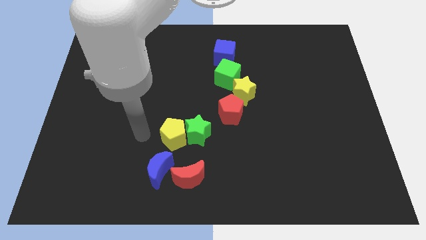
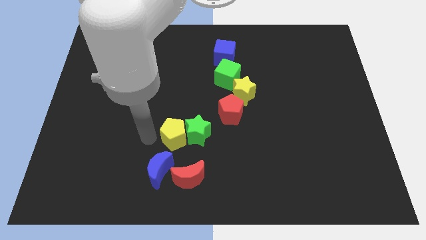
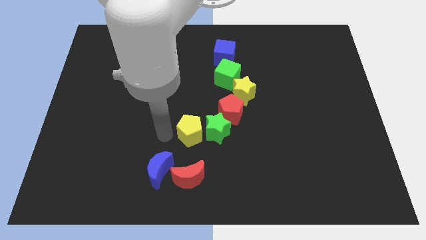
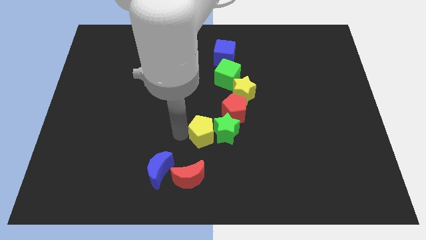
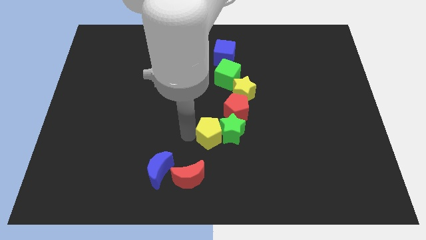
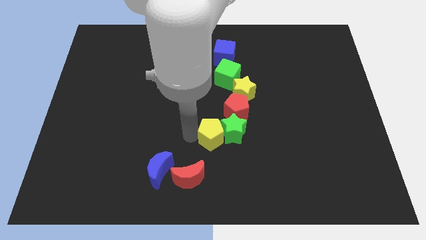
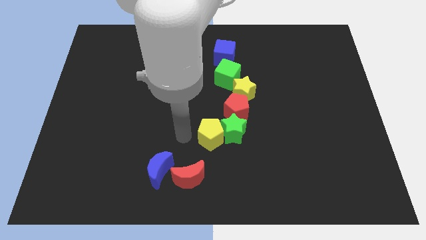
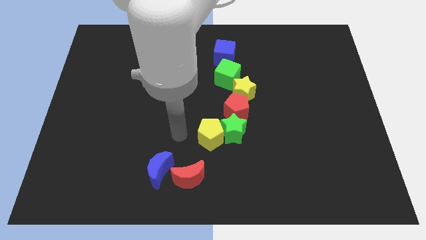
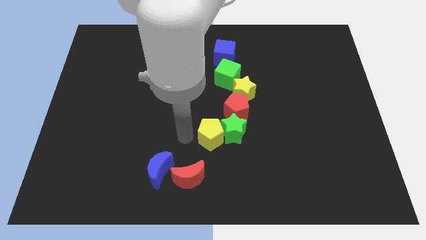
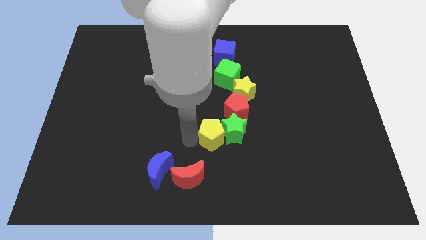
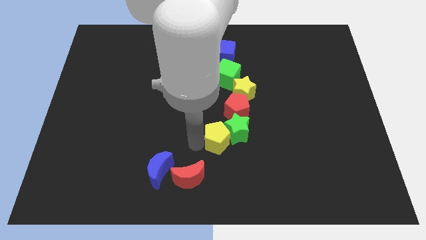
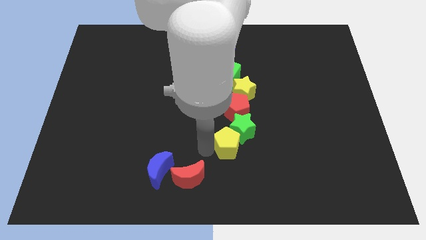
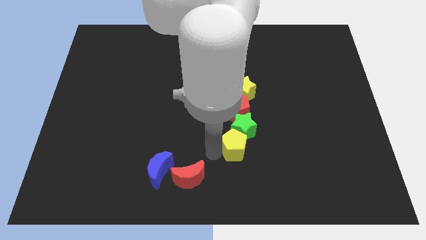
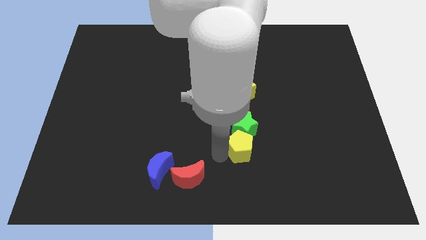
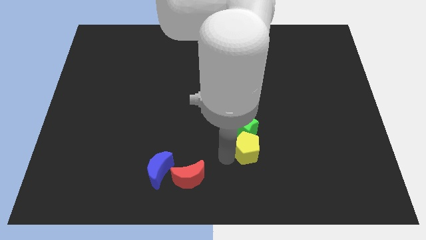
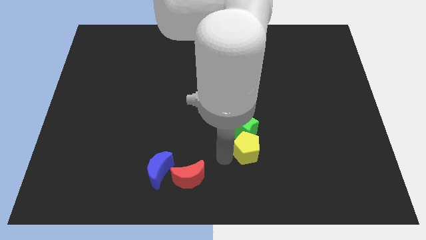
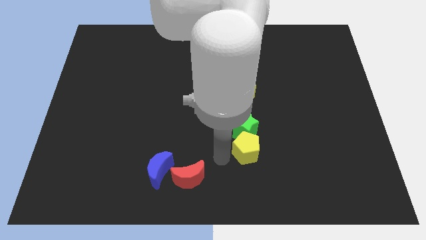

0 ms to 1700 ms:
move the green star and yellow pentagon to the bottom side of the red pentagon

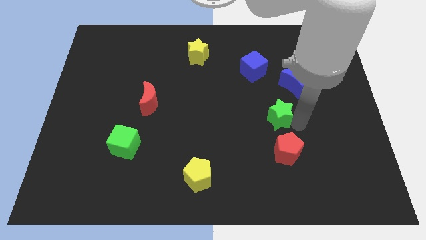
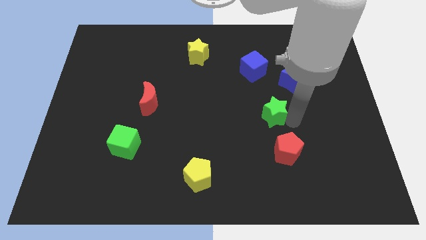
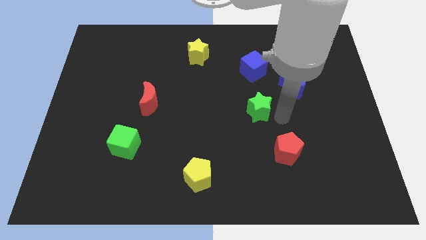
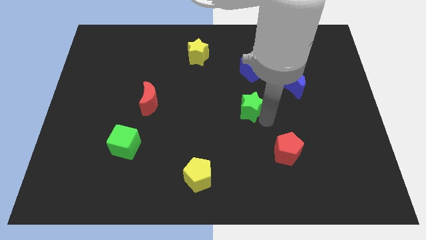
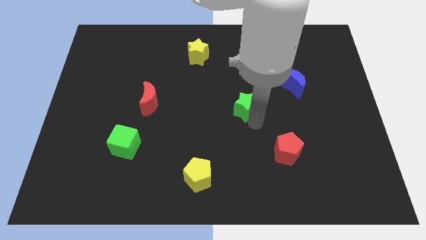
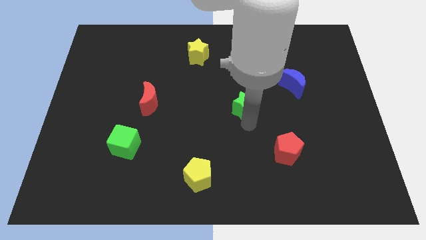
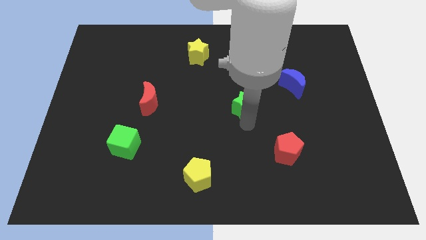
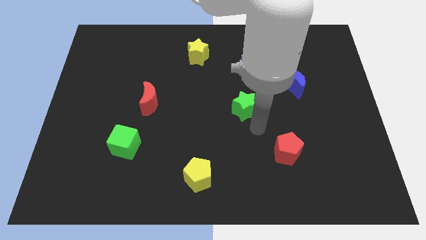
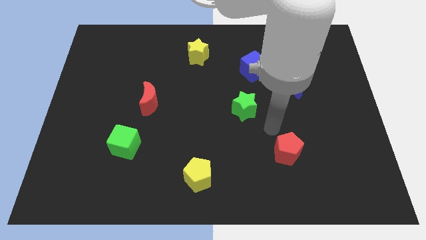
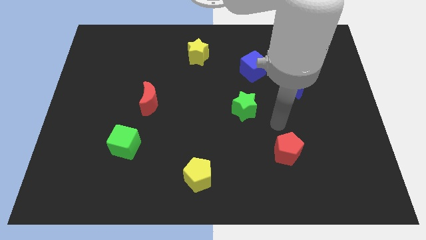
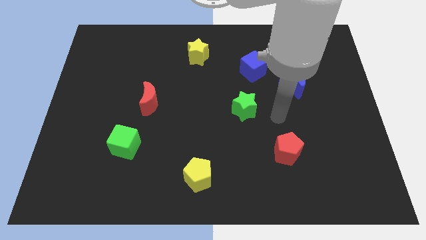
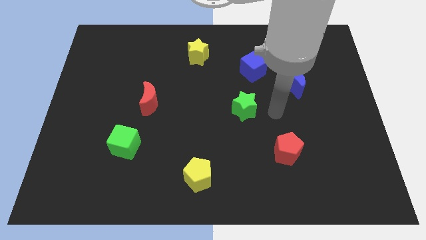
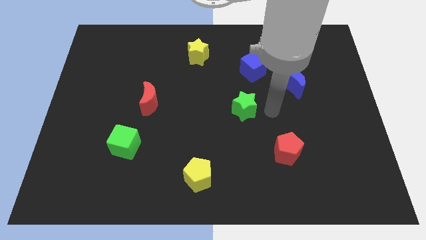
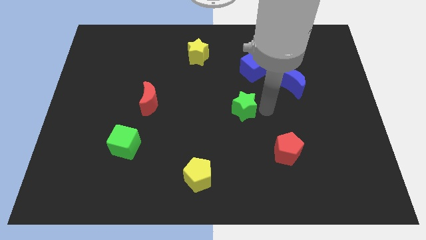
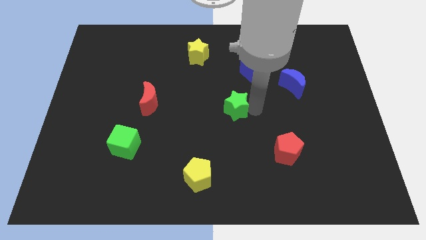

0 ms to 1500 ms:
place the green star in between the blue cube and yellow pentagon

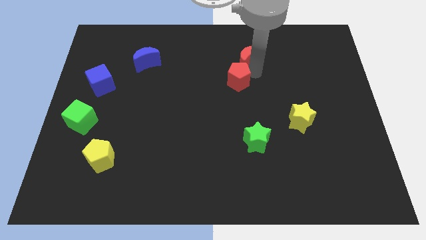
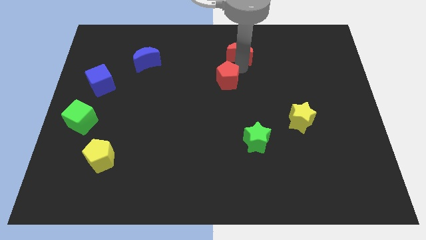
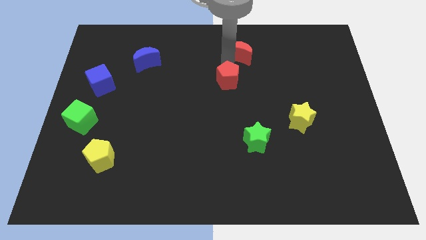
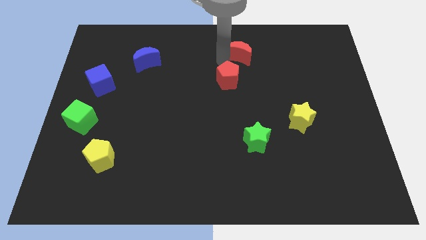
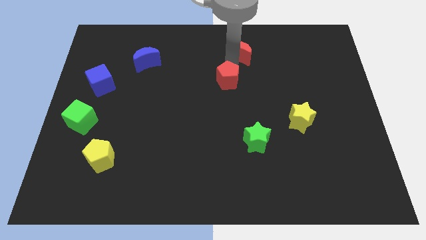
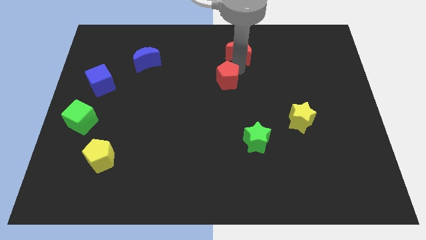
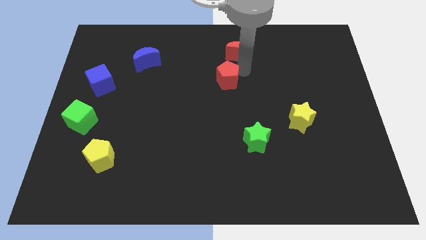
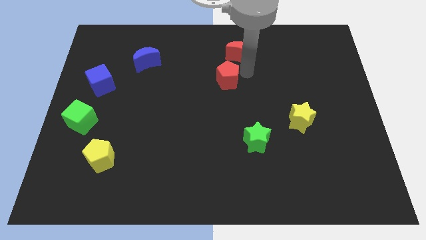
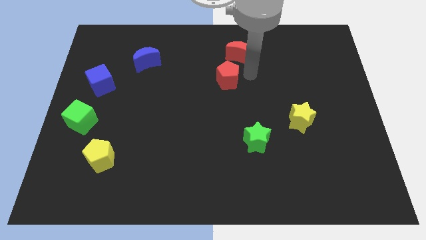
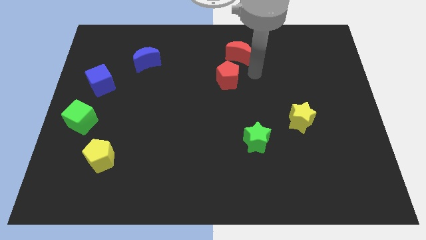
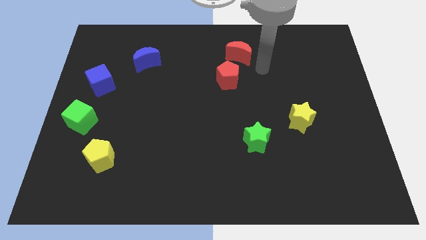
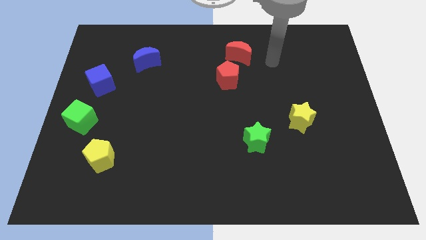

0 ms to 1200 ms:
separate the red pentagon from the red crescent

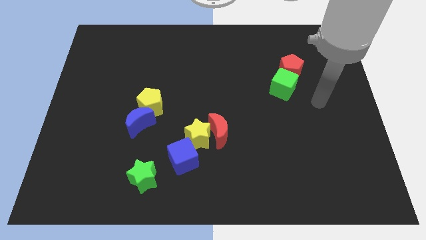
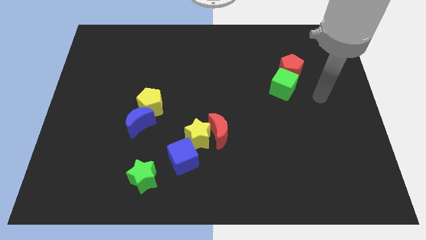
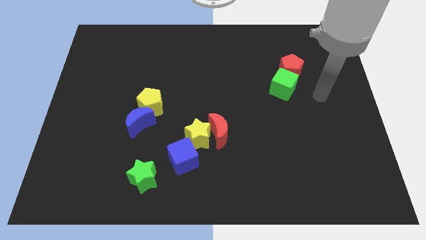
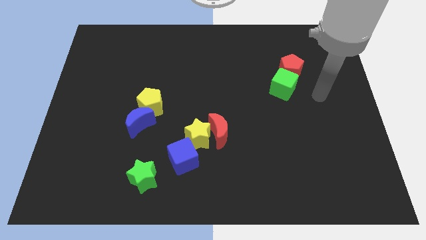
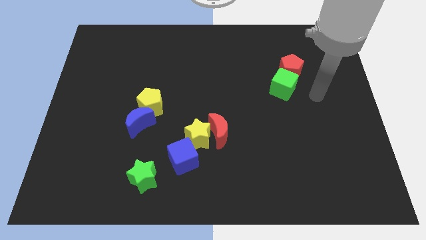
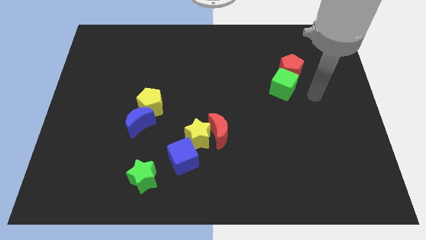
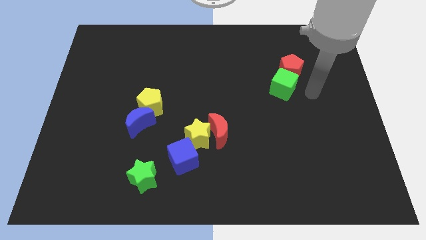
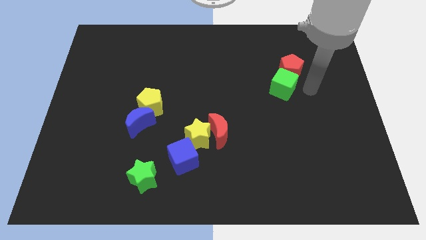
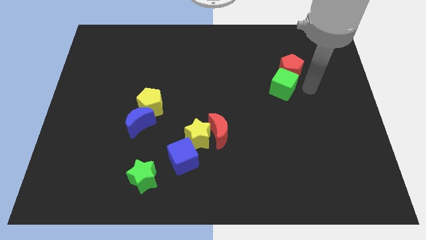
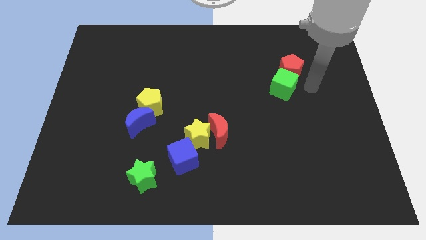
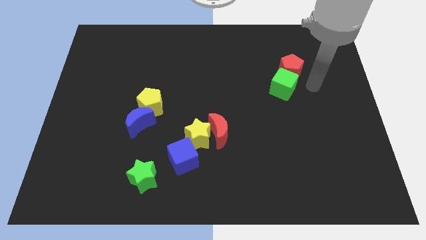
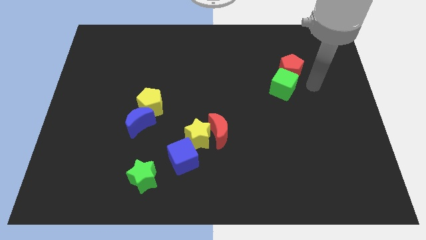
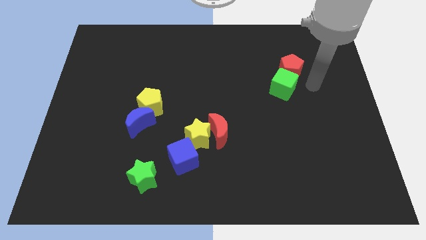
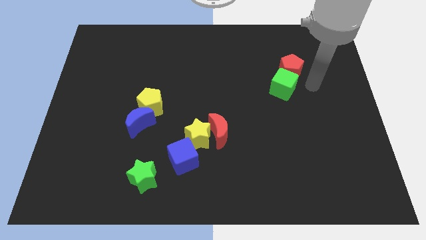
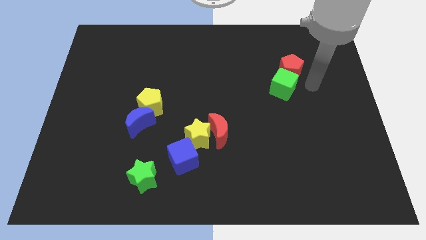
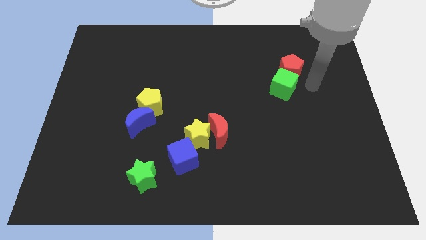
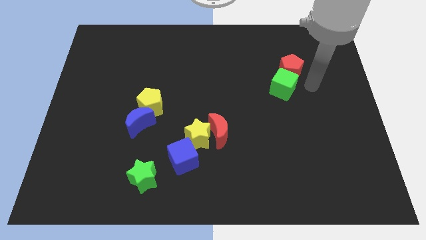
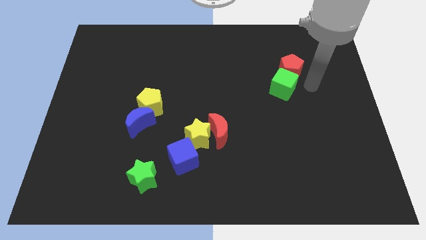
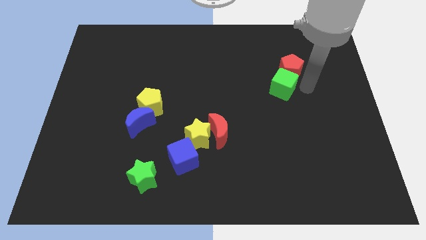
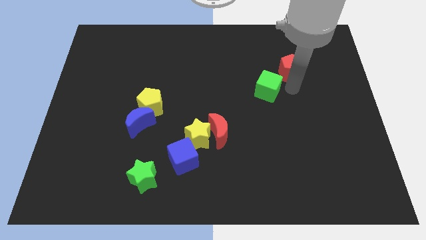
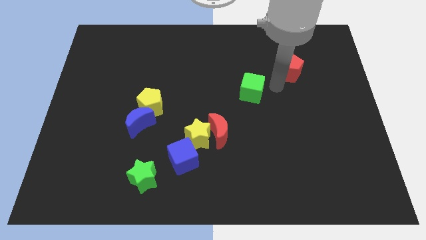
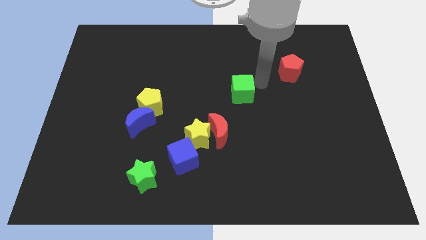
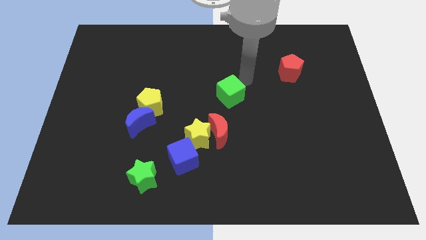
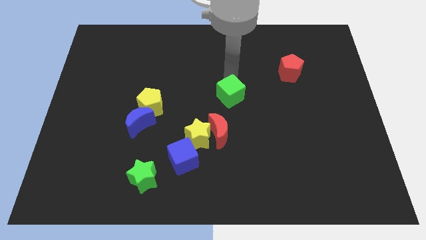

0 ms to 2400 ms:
separate the green cube from red pentagon

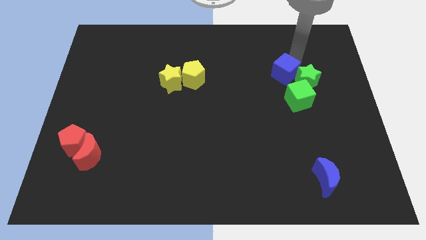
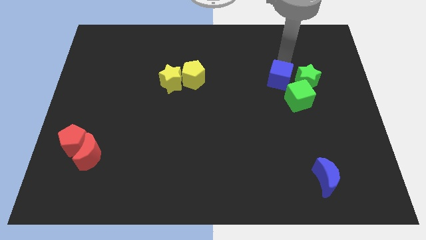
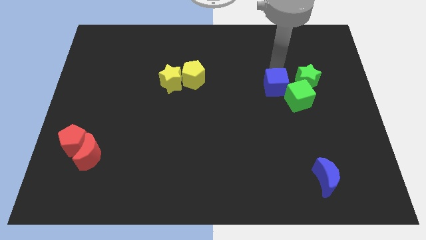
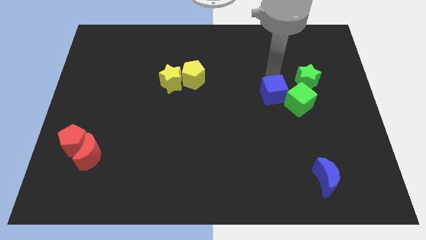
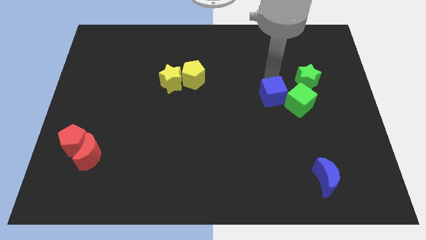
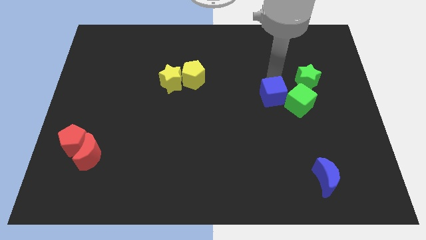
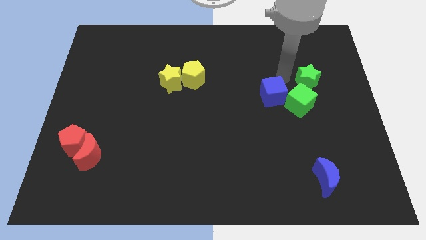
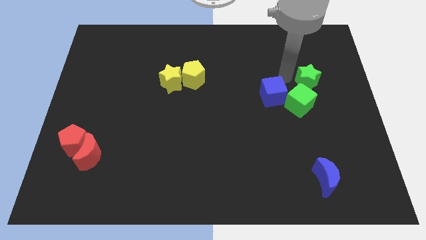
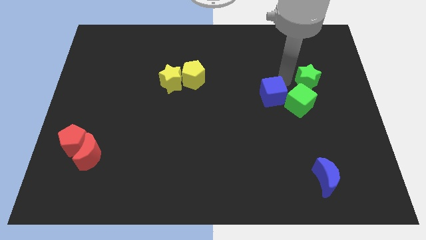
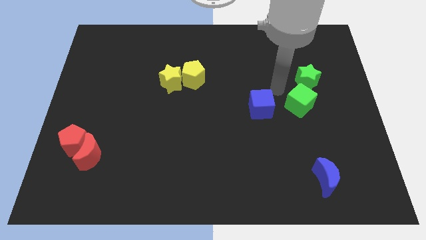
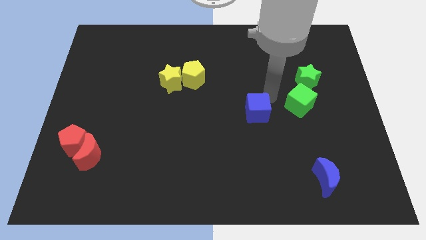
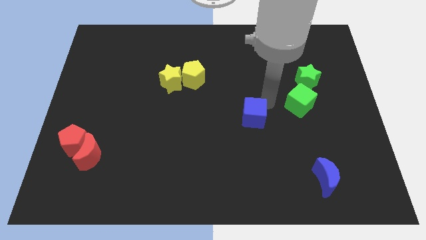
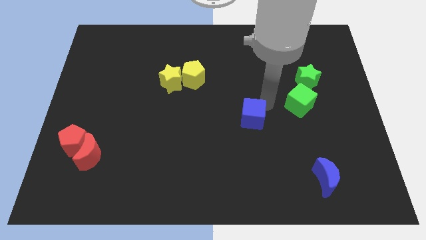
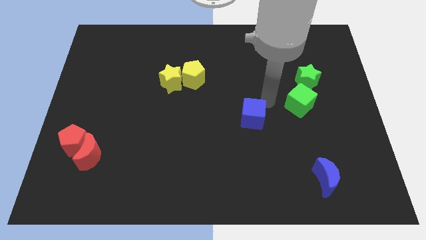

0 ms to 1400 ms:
slide the blue cube diagonally bottom right to the yellows blocks

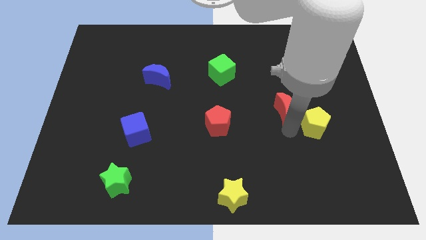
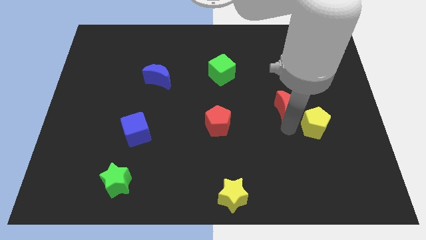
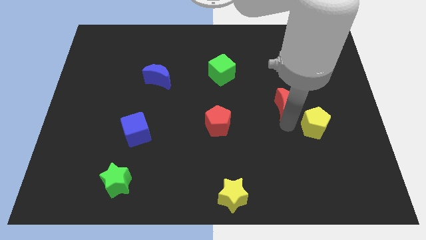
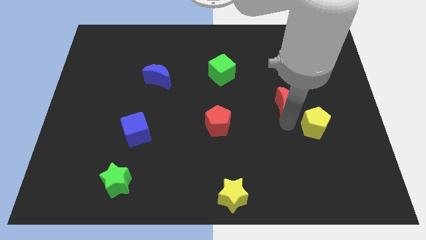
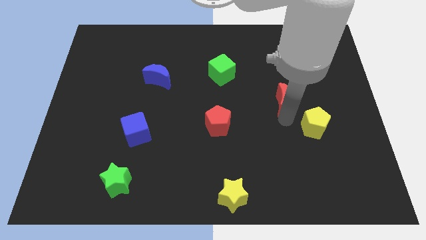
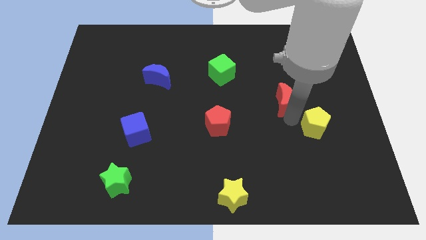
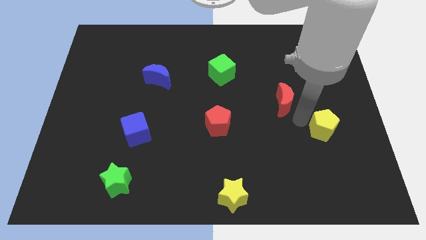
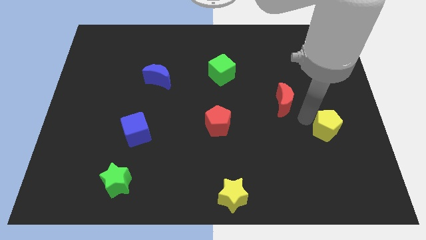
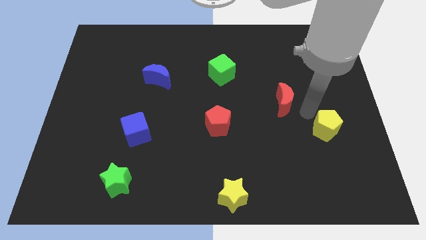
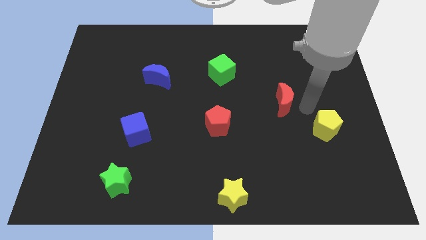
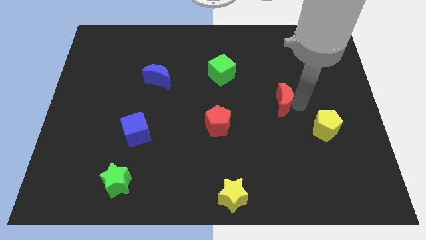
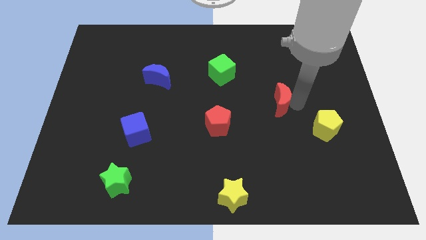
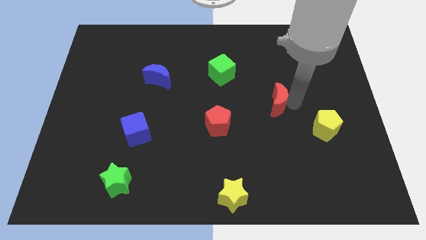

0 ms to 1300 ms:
separate the yellow pentagon from the red crescent
